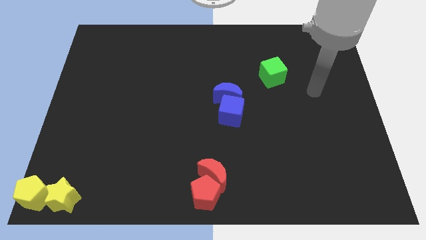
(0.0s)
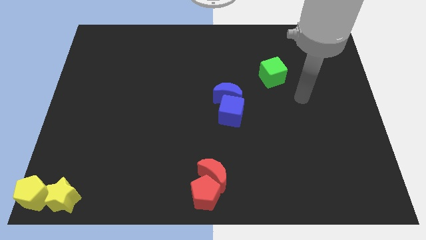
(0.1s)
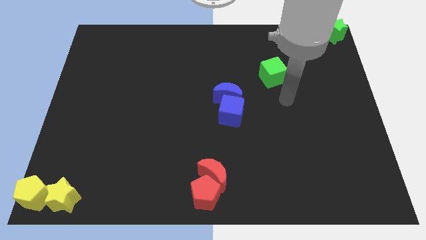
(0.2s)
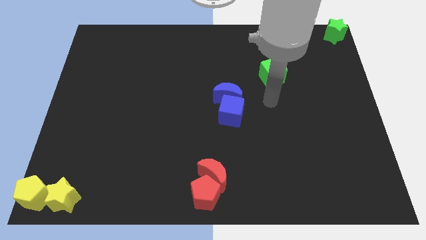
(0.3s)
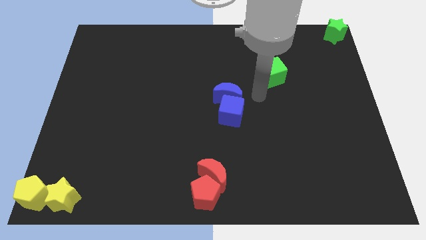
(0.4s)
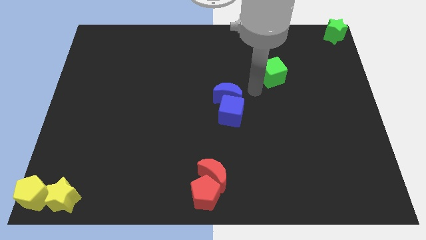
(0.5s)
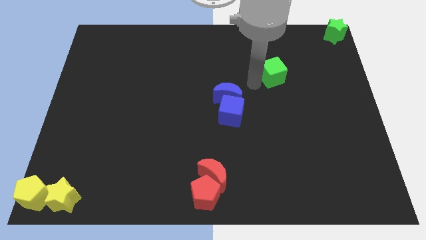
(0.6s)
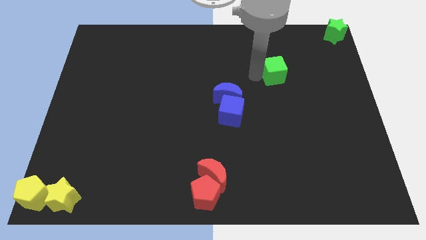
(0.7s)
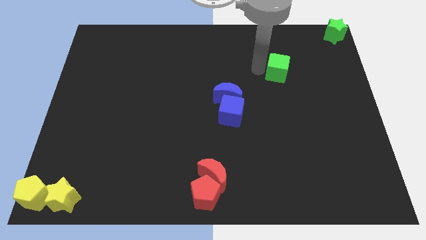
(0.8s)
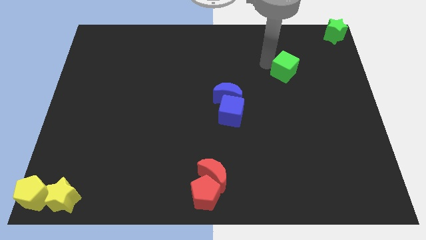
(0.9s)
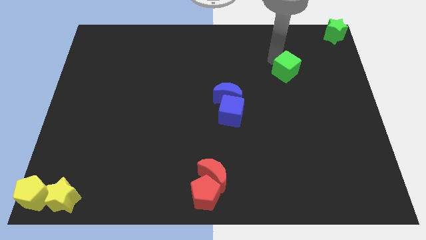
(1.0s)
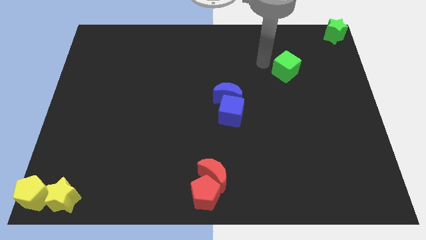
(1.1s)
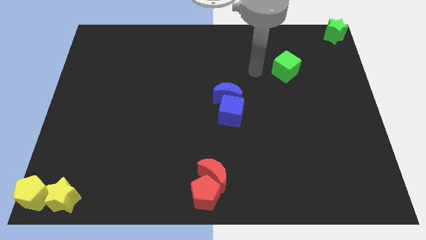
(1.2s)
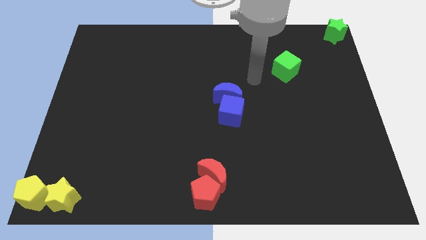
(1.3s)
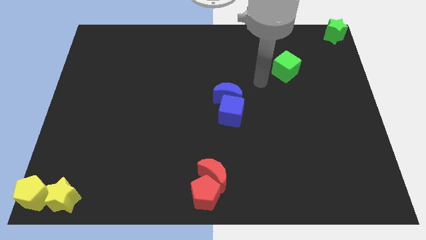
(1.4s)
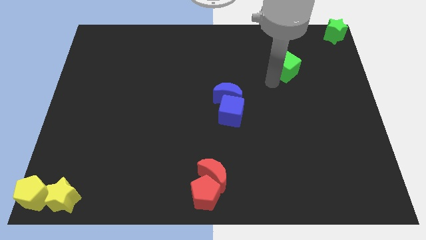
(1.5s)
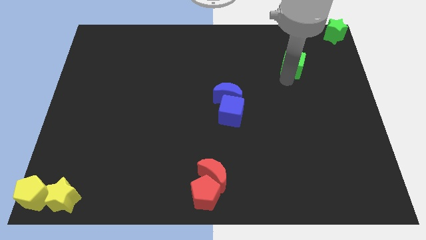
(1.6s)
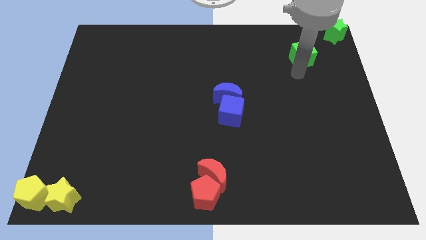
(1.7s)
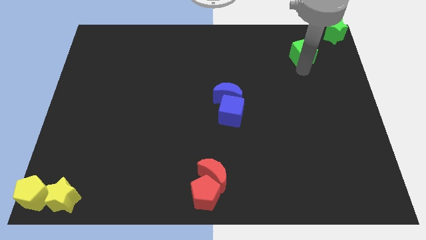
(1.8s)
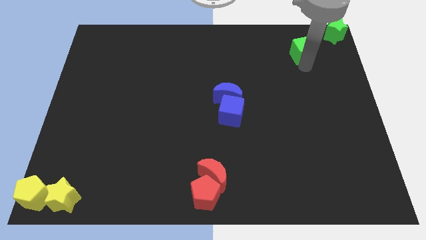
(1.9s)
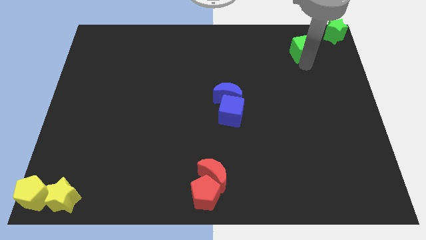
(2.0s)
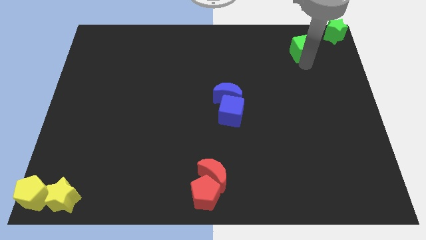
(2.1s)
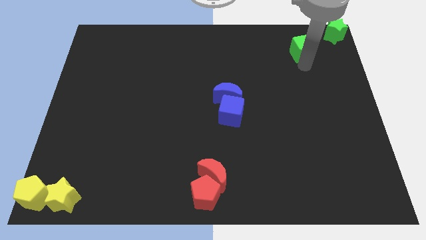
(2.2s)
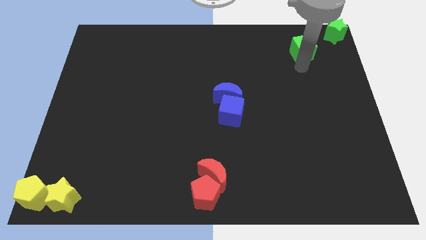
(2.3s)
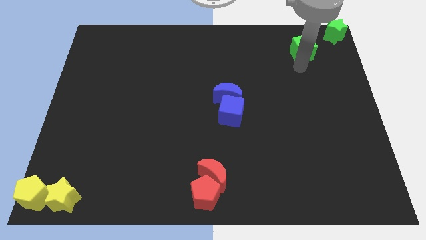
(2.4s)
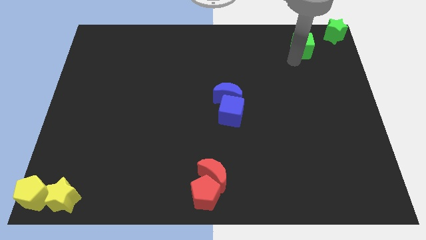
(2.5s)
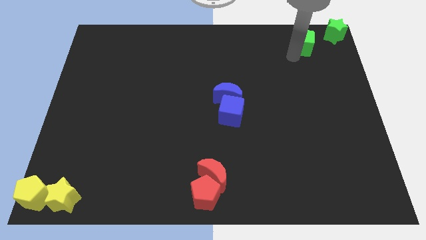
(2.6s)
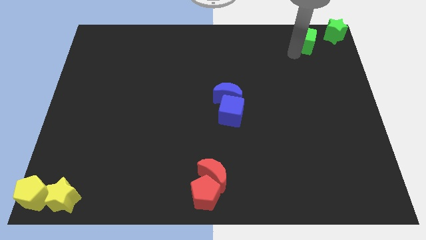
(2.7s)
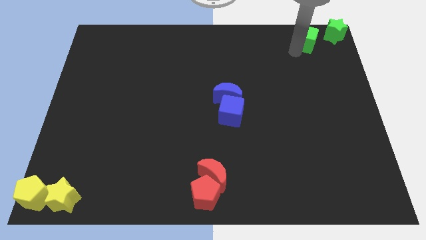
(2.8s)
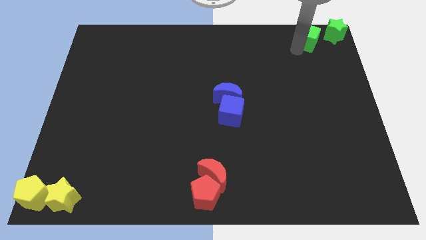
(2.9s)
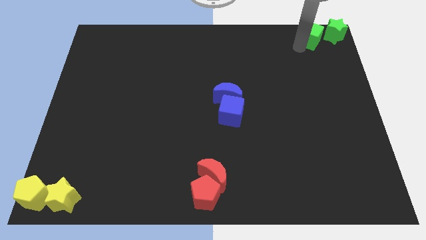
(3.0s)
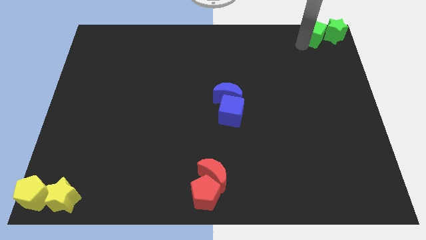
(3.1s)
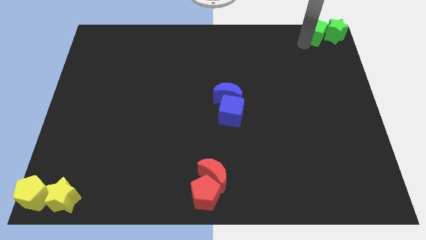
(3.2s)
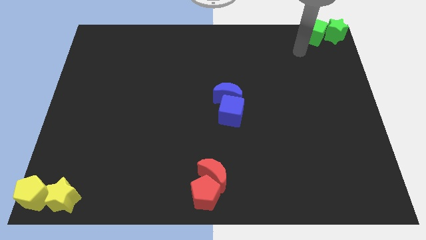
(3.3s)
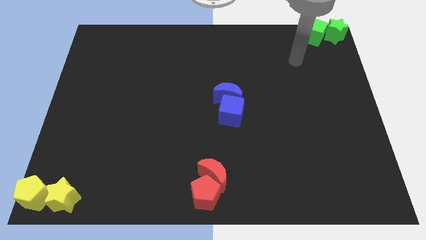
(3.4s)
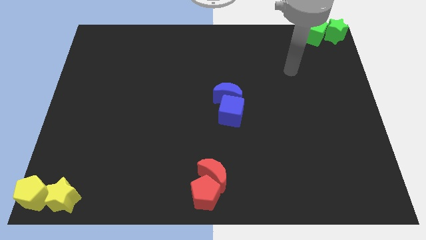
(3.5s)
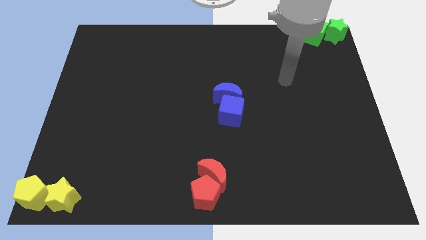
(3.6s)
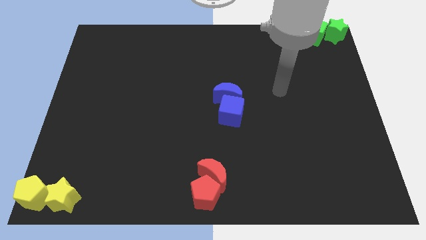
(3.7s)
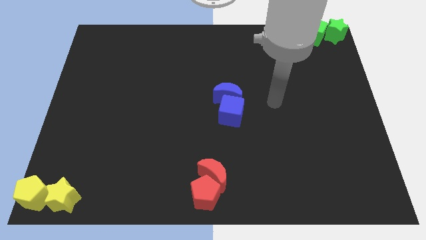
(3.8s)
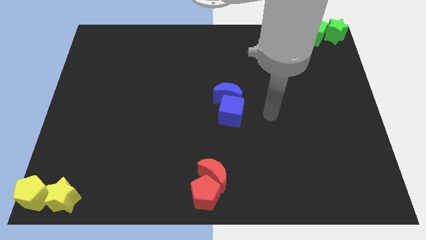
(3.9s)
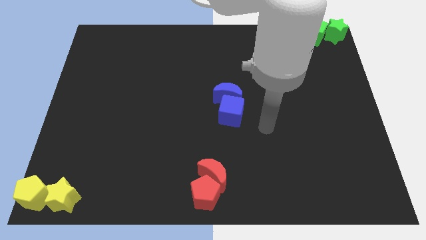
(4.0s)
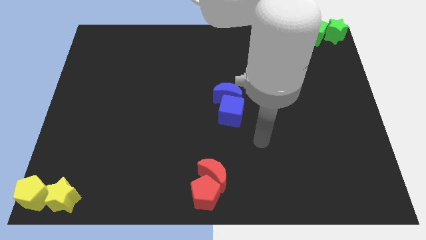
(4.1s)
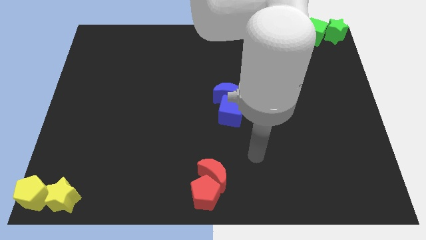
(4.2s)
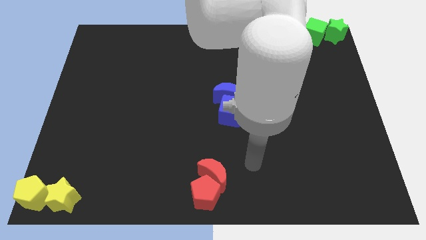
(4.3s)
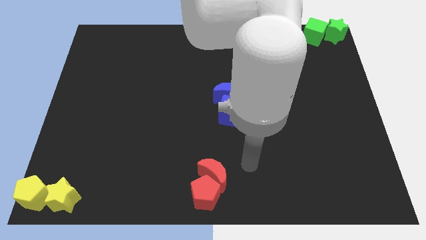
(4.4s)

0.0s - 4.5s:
move the green cube to the top right corner of the board

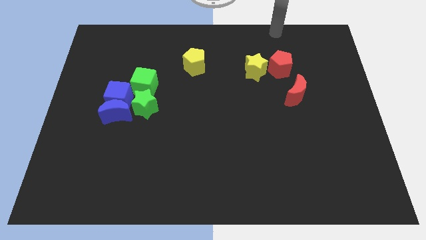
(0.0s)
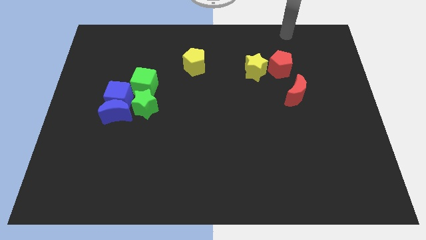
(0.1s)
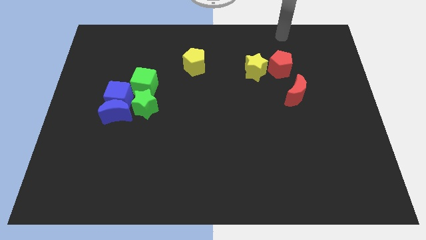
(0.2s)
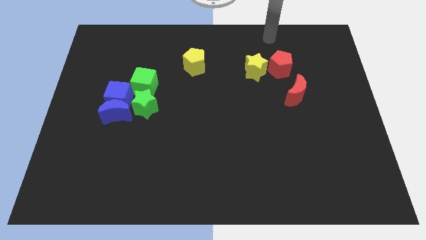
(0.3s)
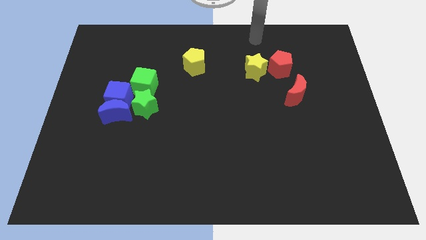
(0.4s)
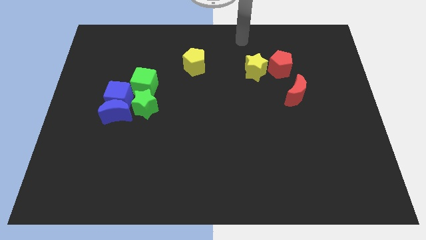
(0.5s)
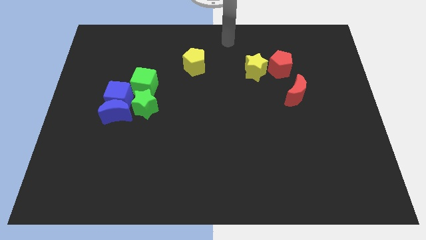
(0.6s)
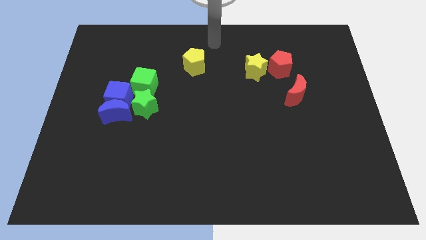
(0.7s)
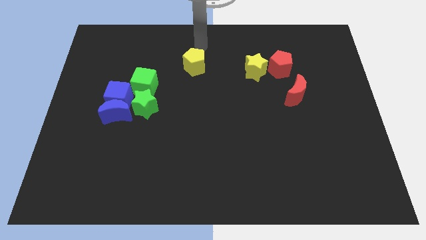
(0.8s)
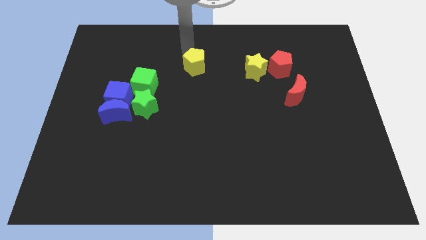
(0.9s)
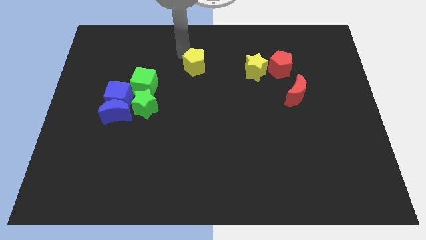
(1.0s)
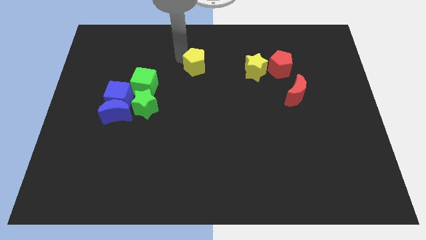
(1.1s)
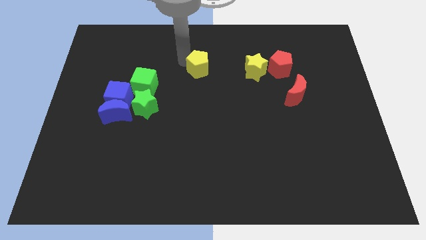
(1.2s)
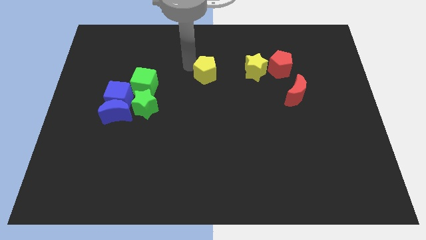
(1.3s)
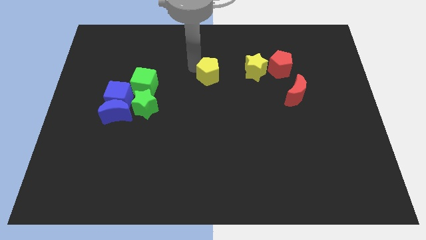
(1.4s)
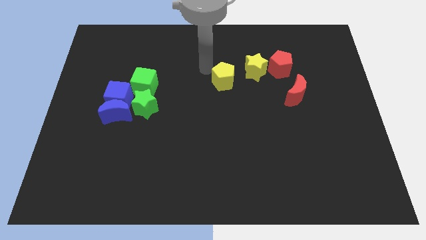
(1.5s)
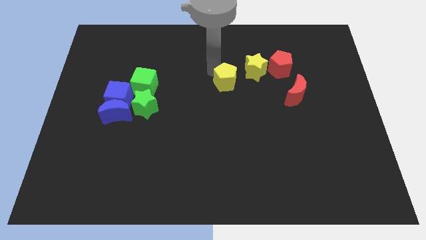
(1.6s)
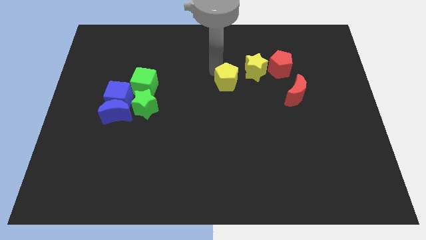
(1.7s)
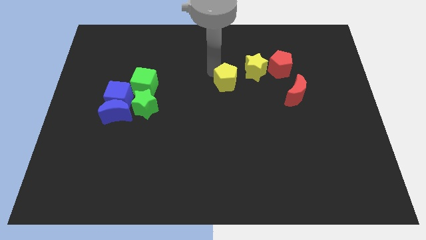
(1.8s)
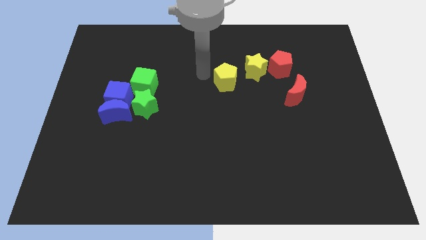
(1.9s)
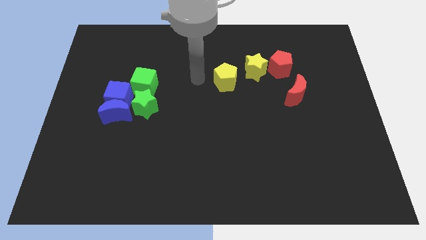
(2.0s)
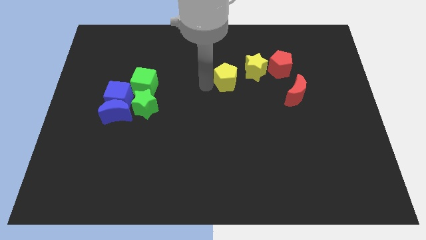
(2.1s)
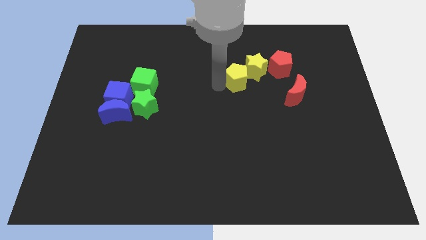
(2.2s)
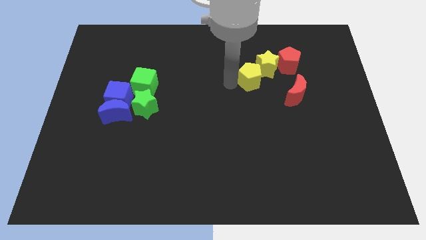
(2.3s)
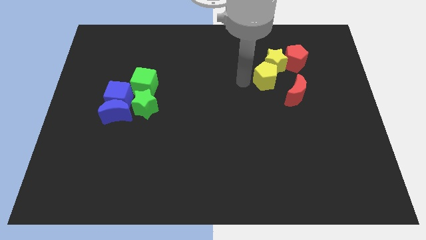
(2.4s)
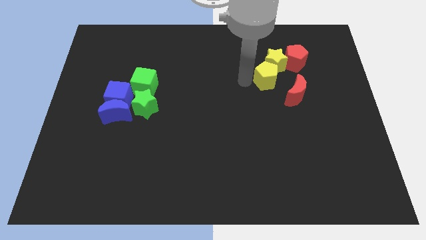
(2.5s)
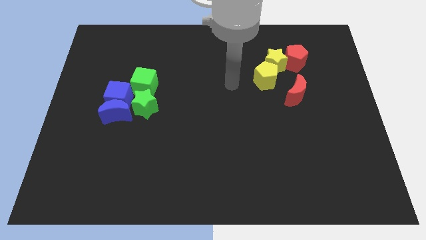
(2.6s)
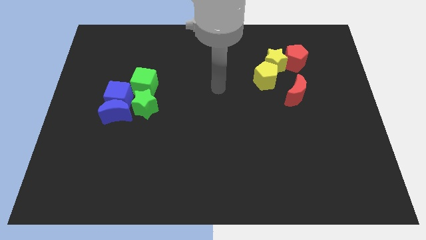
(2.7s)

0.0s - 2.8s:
place the yellow pentagon to the left of the red moon

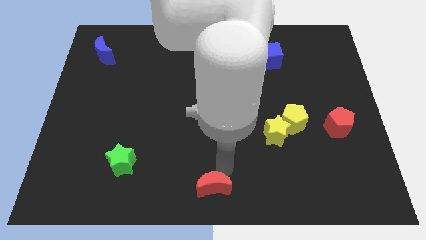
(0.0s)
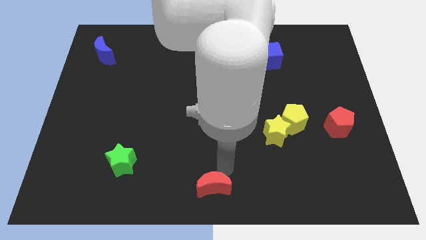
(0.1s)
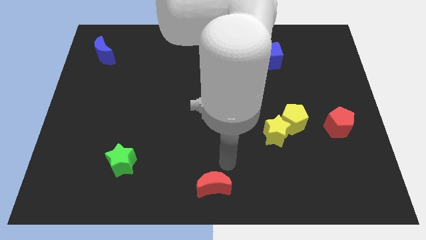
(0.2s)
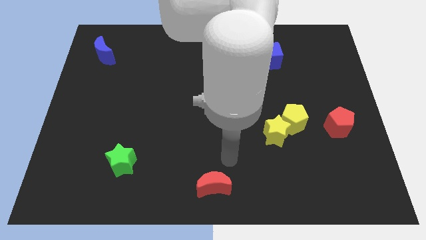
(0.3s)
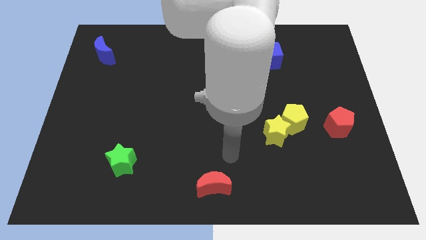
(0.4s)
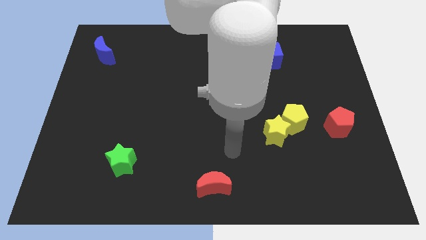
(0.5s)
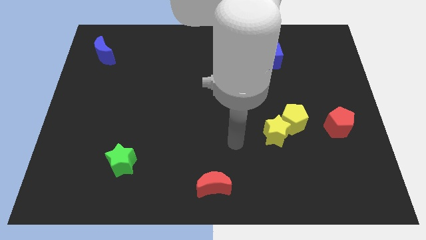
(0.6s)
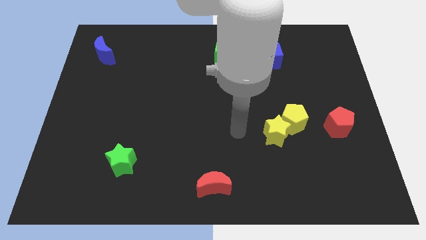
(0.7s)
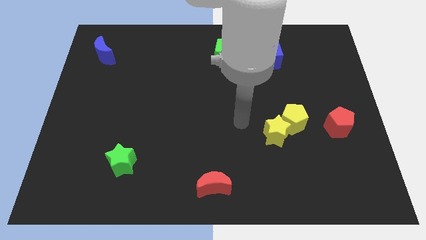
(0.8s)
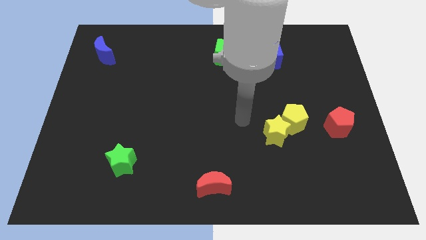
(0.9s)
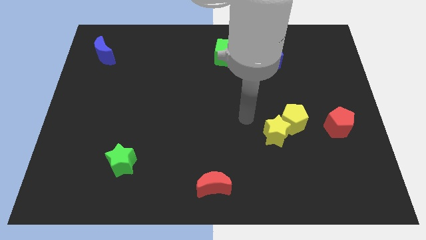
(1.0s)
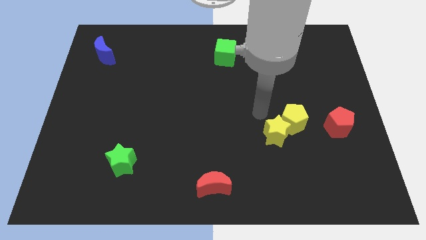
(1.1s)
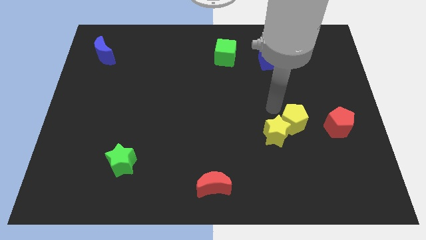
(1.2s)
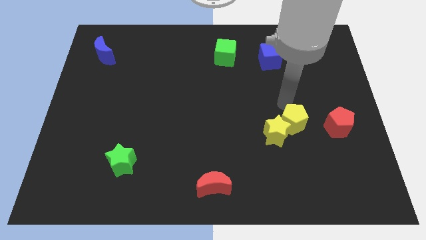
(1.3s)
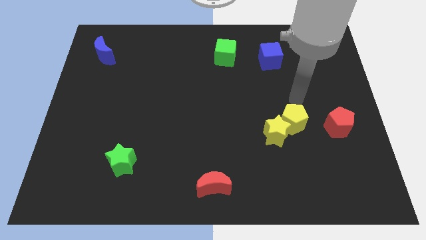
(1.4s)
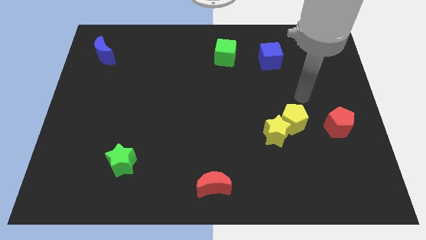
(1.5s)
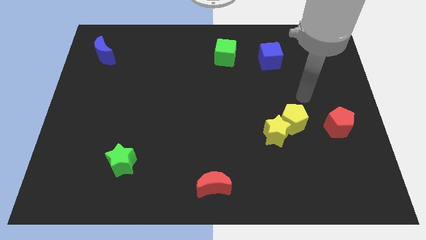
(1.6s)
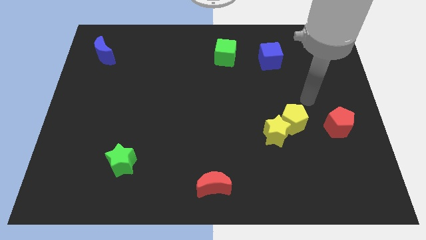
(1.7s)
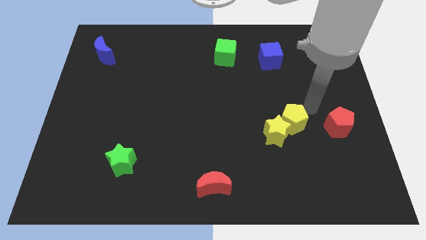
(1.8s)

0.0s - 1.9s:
move your arm towards yellow pentagon
